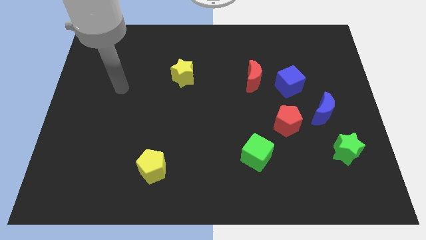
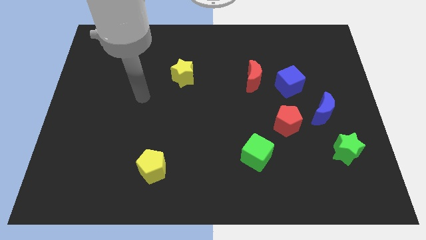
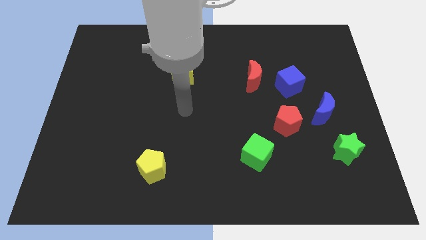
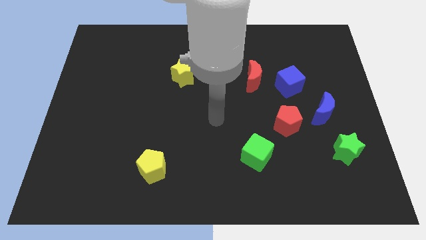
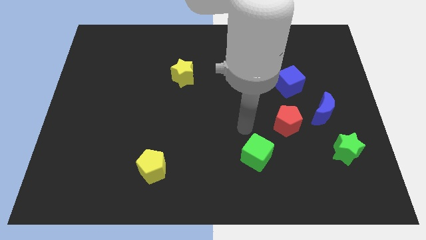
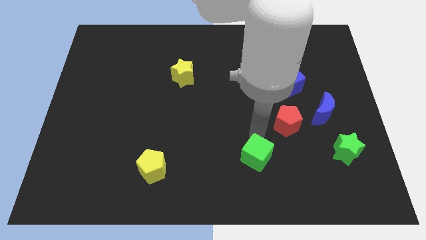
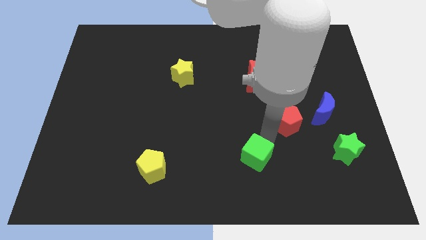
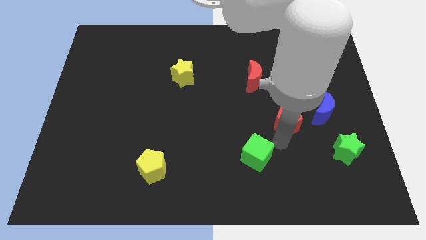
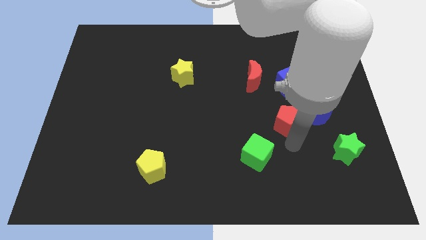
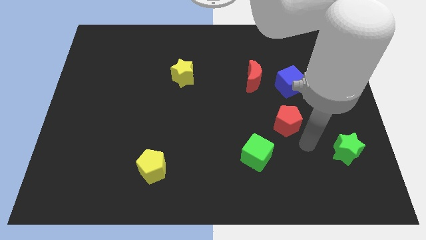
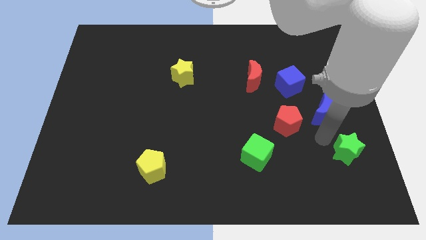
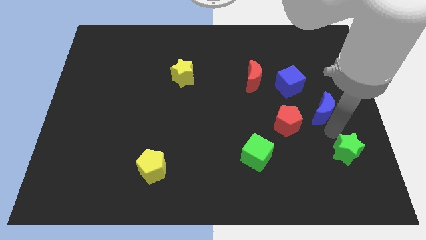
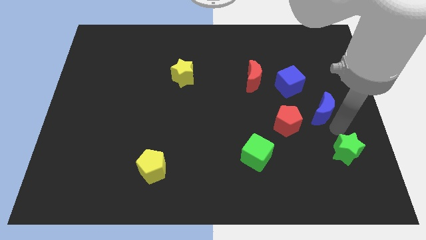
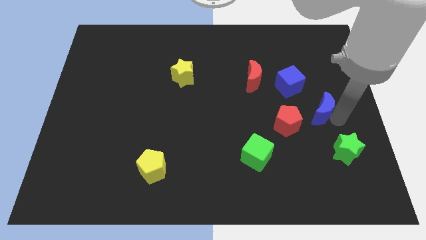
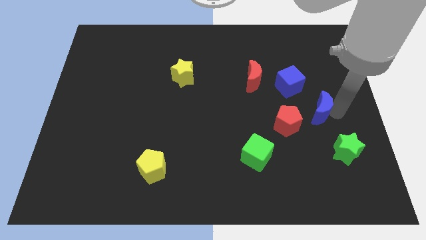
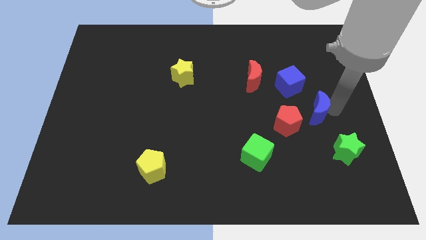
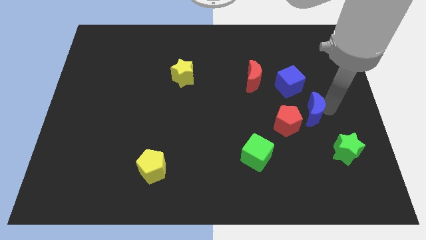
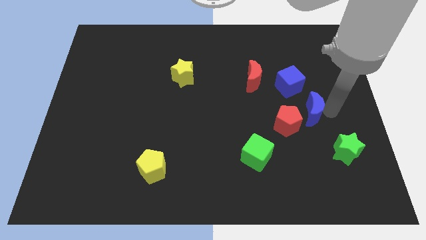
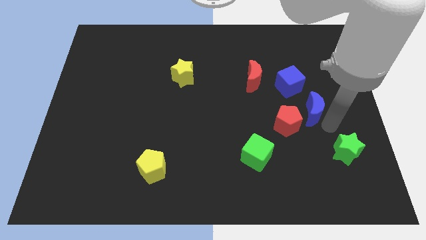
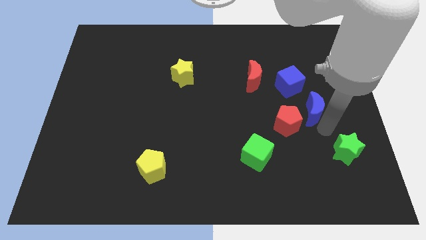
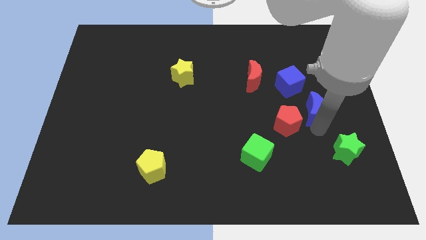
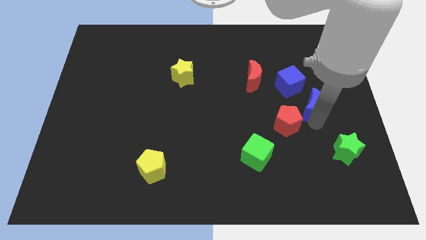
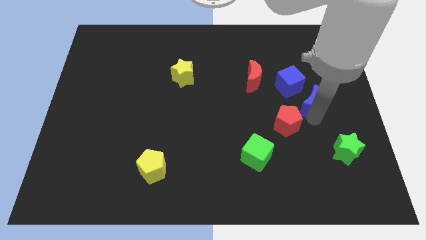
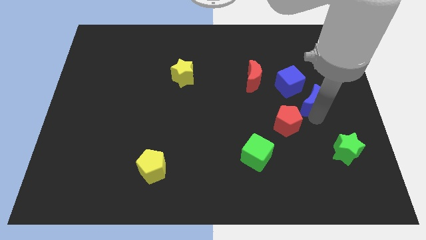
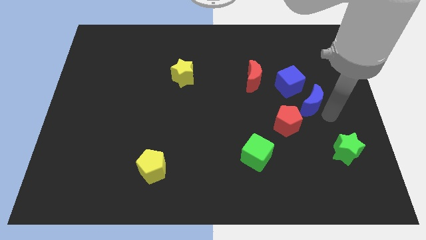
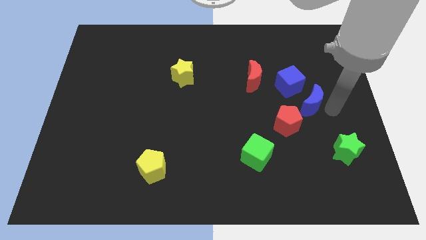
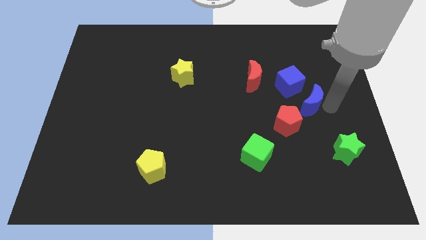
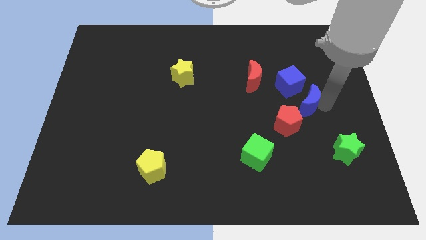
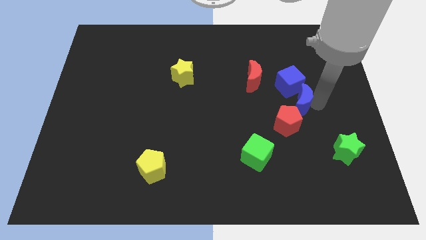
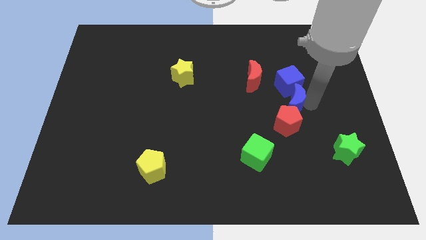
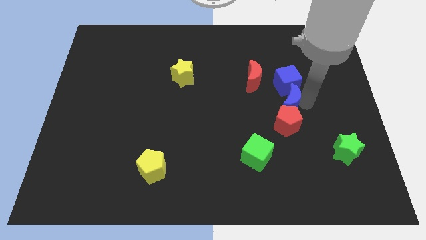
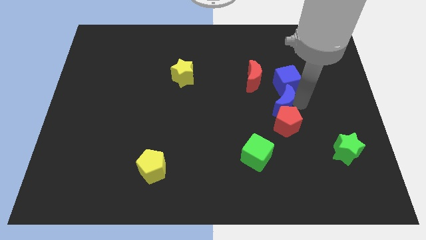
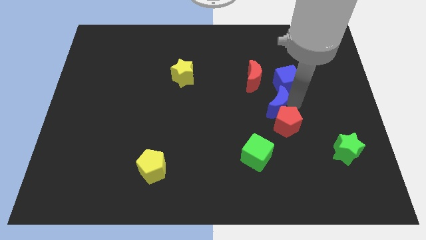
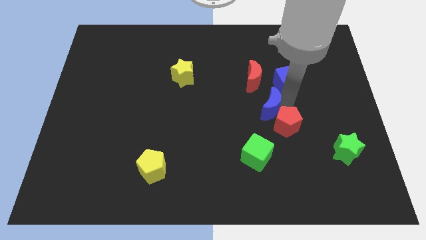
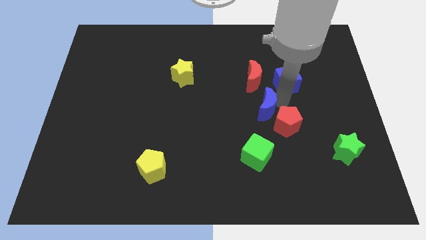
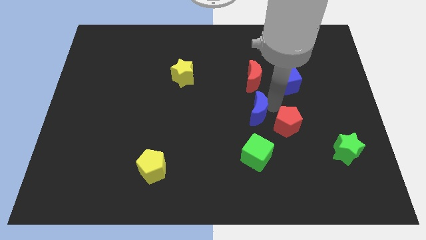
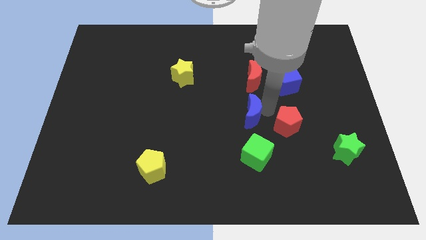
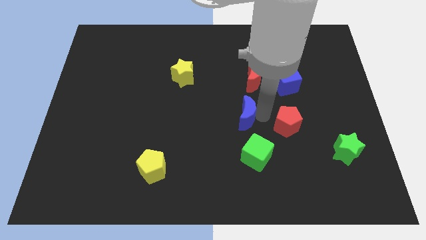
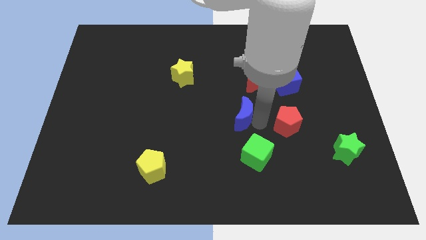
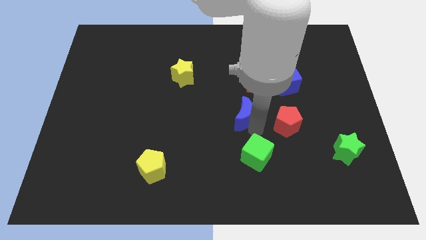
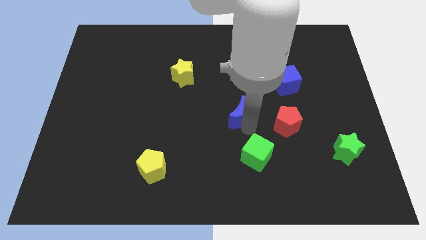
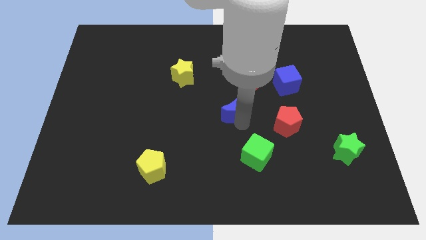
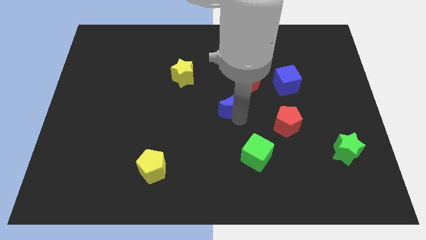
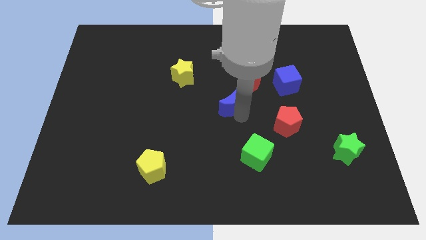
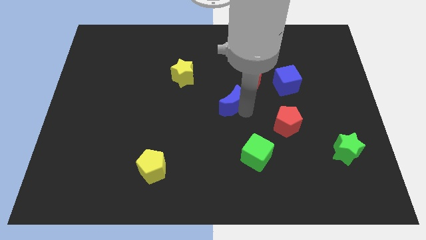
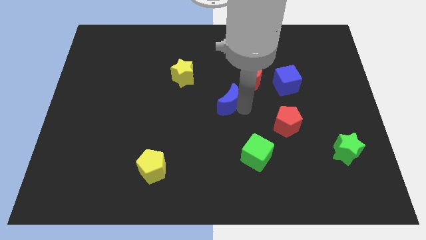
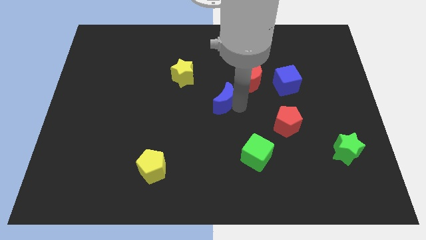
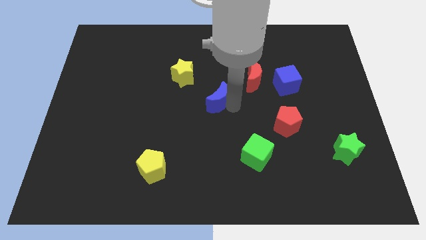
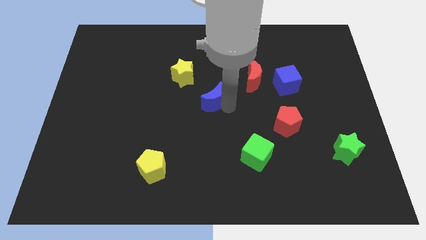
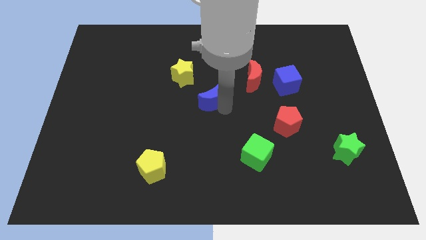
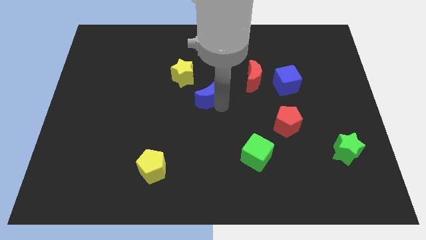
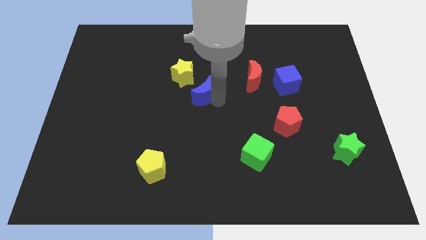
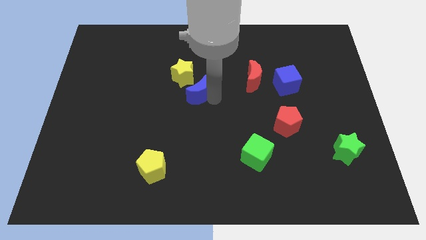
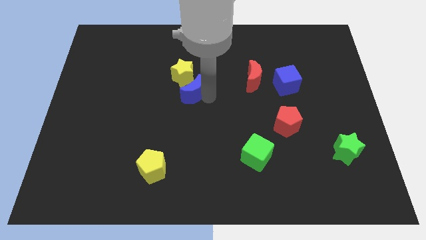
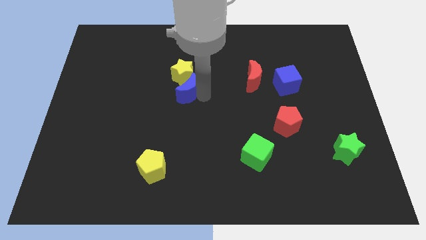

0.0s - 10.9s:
put the blue moon to the yellow star

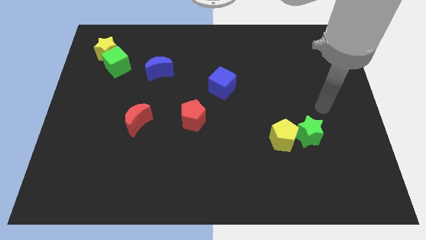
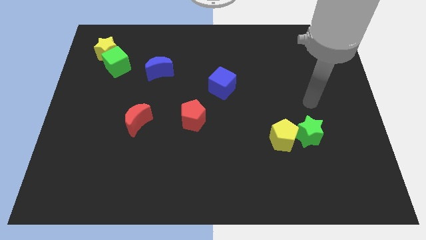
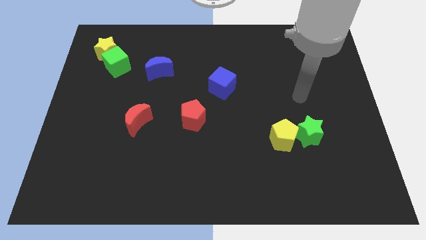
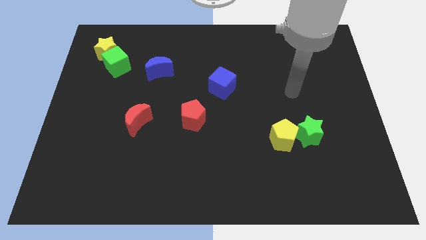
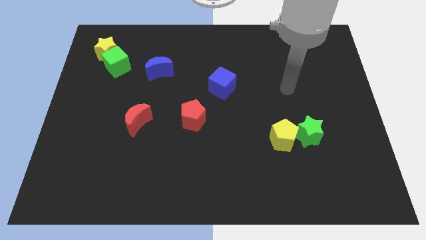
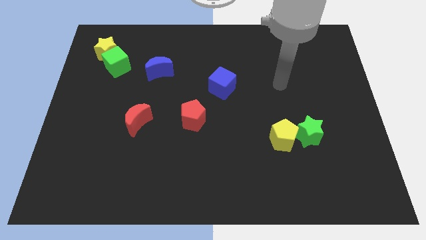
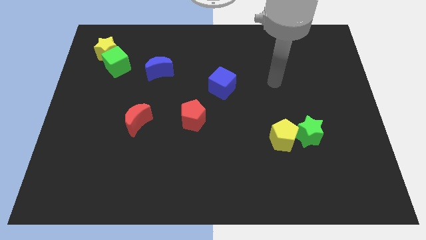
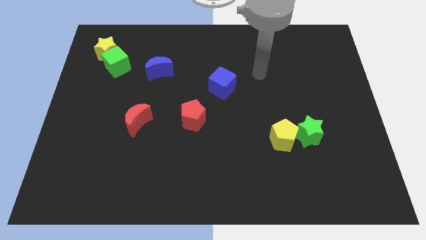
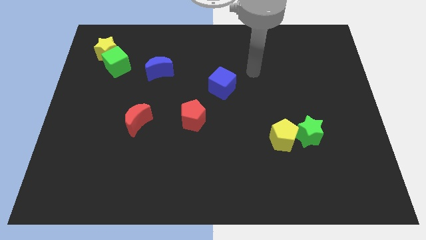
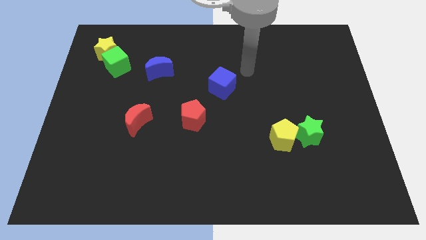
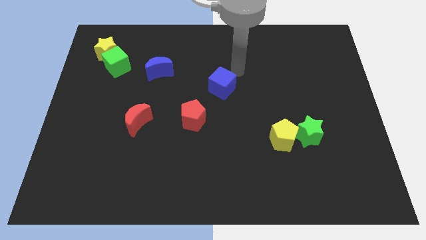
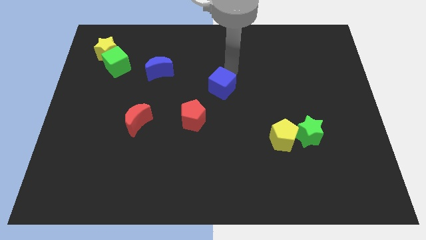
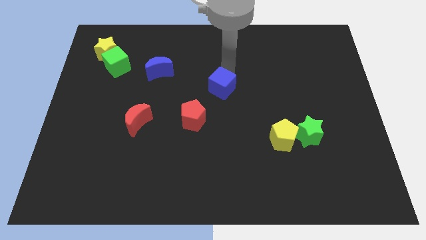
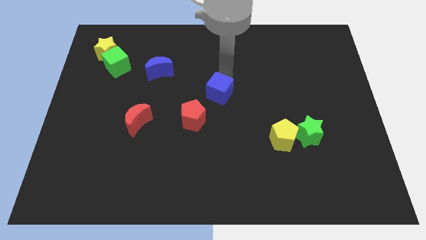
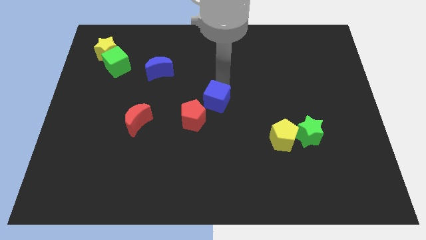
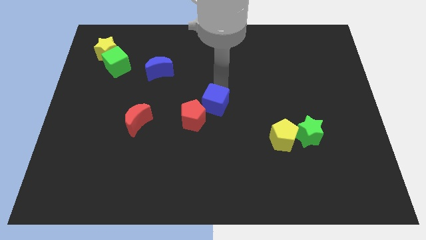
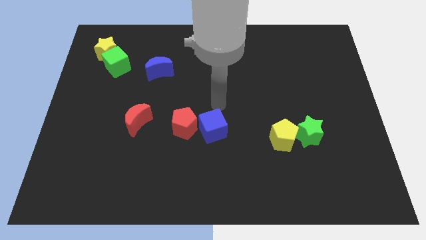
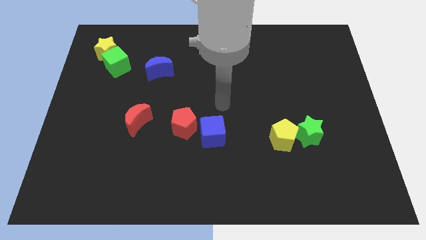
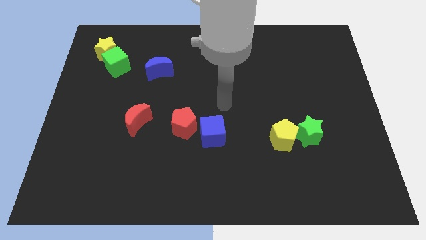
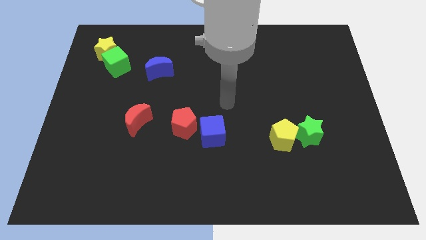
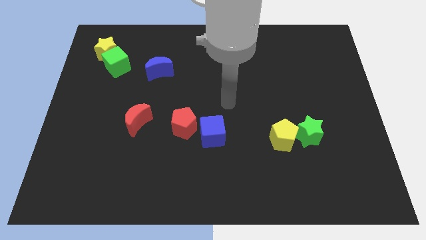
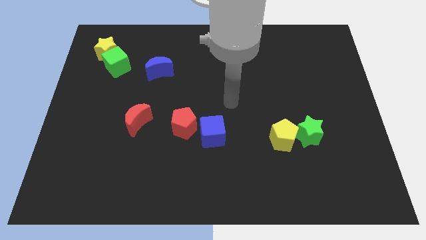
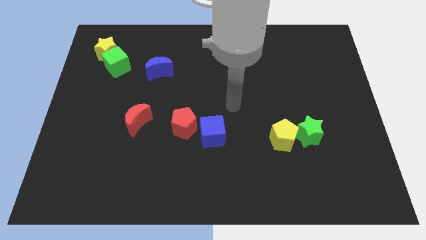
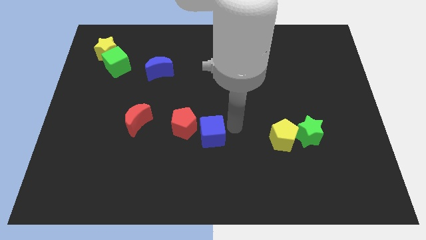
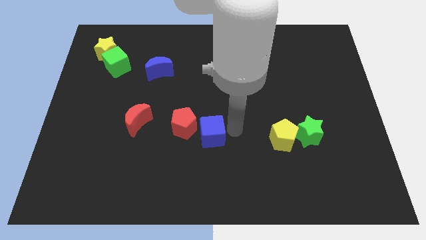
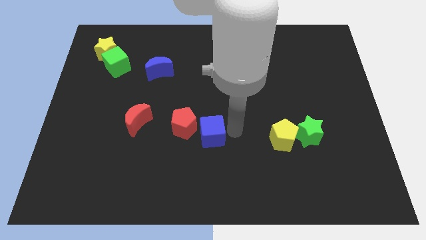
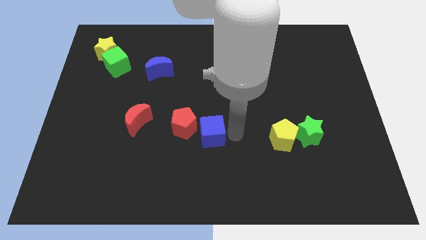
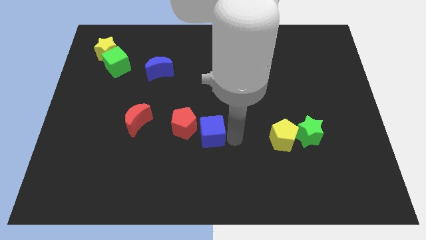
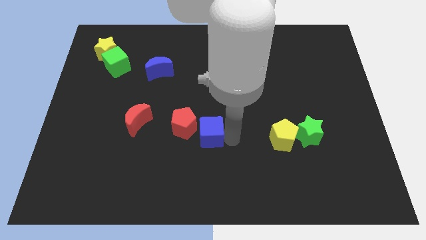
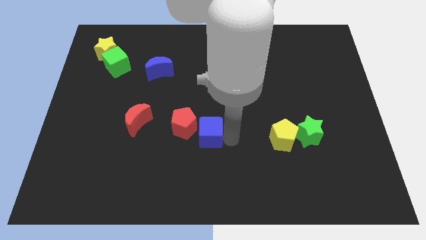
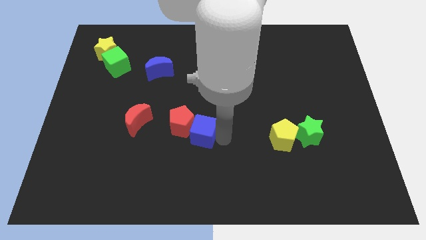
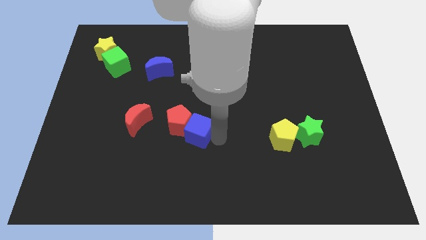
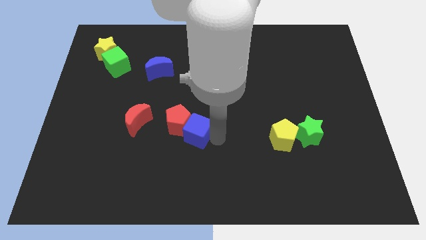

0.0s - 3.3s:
put the blue cube towards the red pentagon
